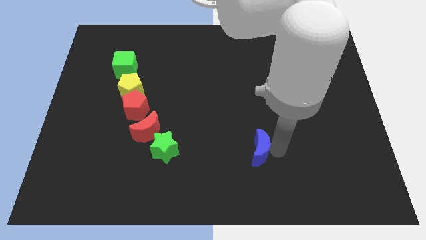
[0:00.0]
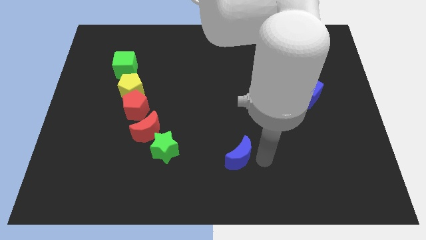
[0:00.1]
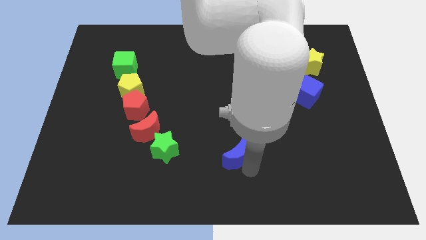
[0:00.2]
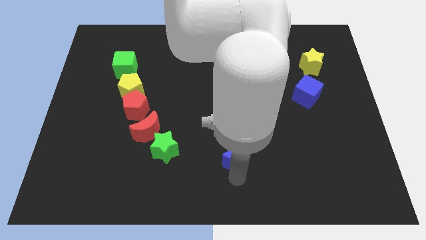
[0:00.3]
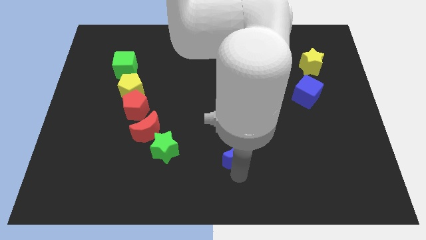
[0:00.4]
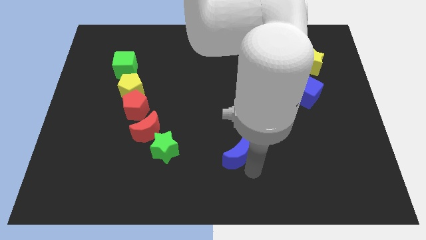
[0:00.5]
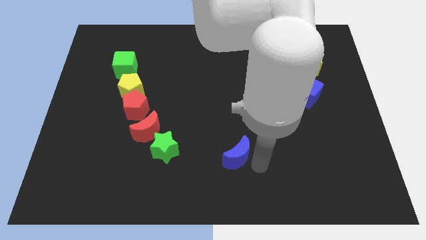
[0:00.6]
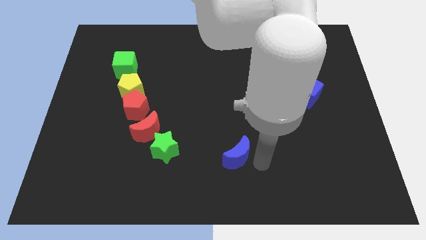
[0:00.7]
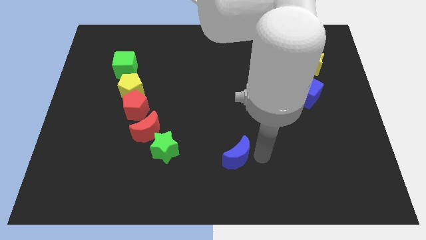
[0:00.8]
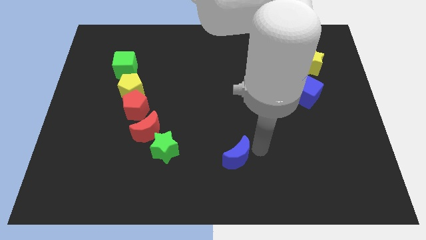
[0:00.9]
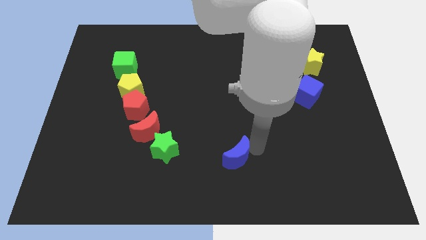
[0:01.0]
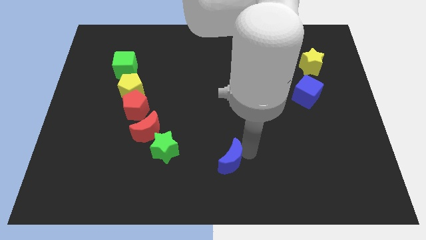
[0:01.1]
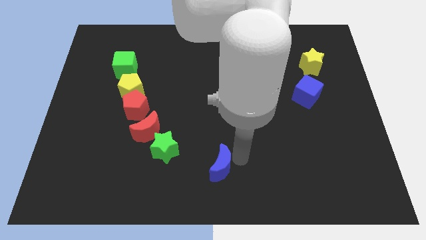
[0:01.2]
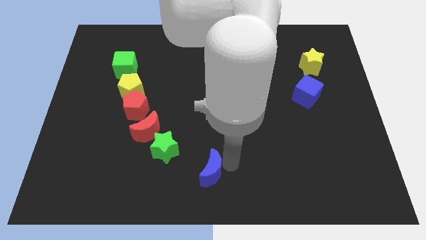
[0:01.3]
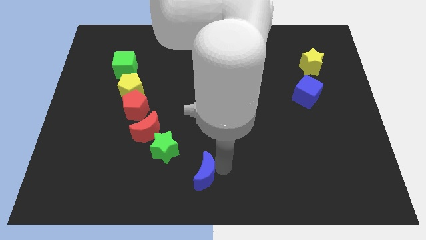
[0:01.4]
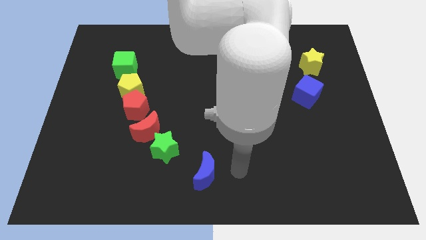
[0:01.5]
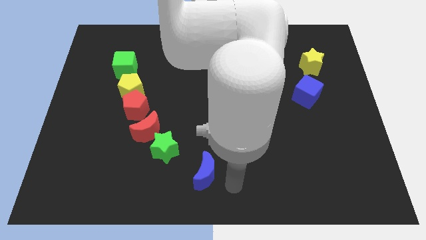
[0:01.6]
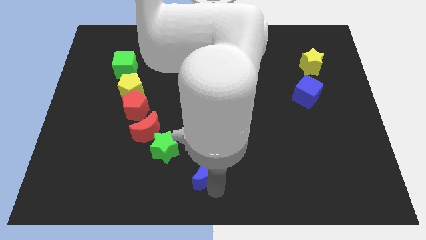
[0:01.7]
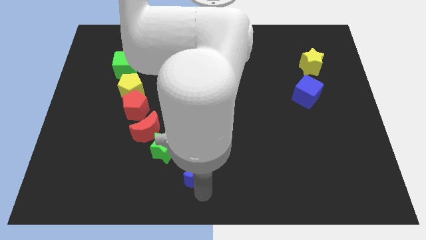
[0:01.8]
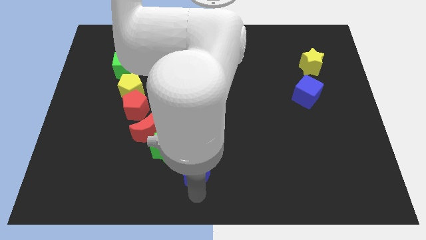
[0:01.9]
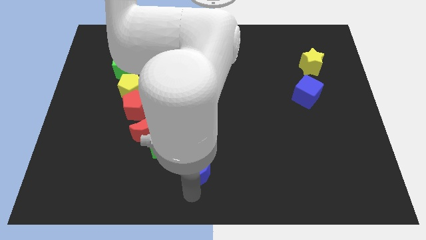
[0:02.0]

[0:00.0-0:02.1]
push blue crescent diagonally towards green star

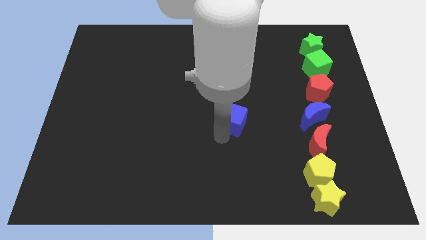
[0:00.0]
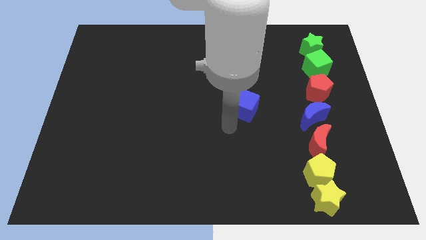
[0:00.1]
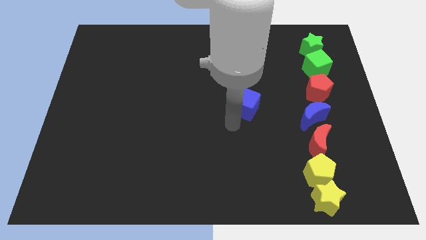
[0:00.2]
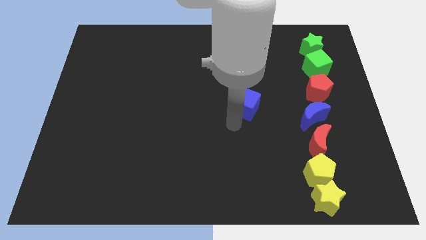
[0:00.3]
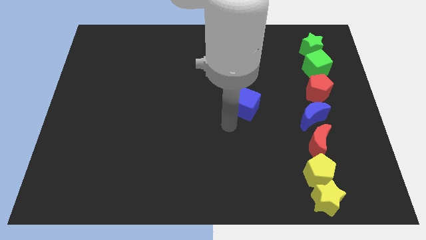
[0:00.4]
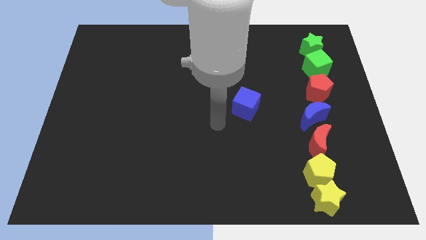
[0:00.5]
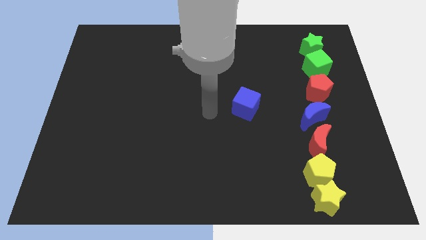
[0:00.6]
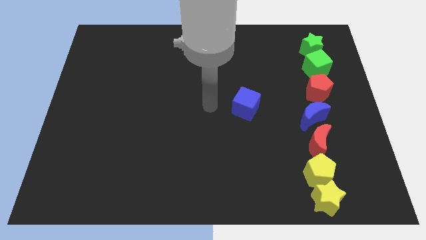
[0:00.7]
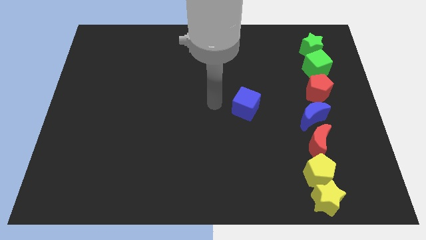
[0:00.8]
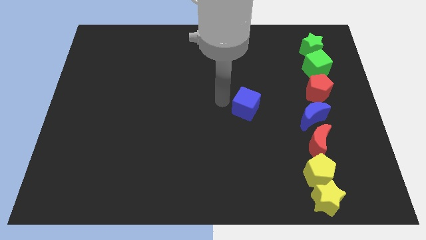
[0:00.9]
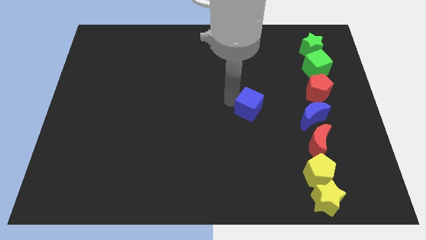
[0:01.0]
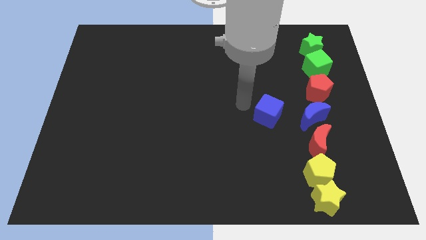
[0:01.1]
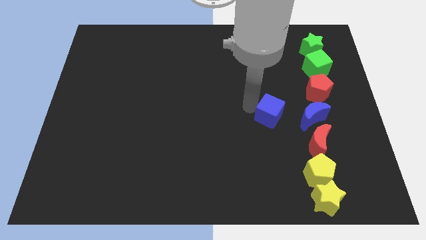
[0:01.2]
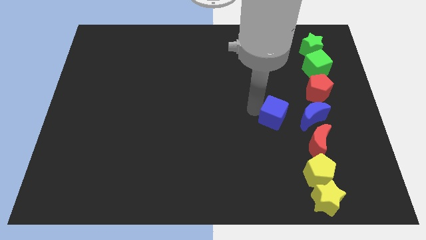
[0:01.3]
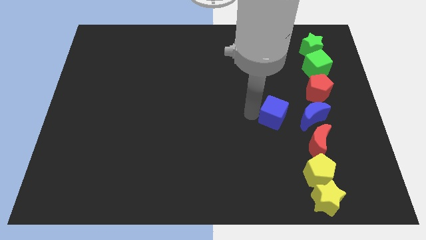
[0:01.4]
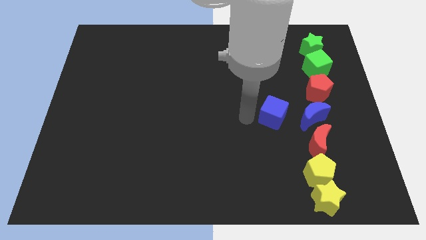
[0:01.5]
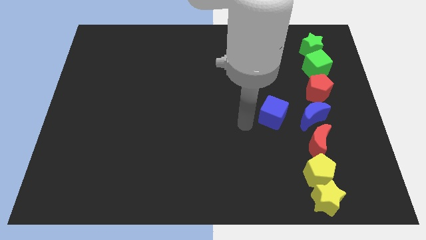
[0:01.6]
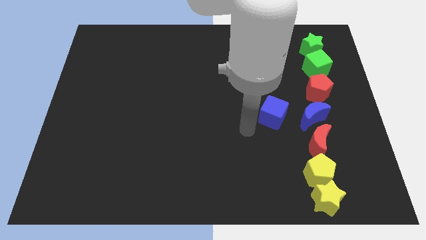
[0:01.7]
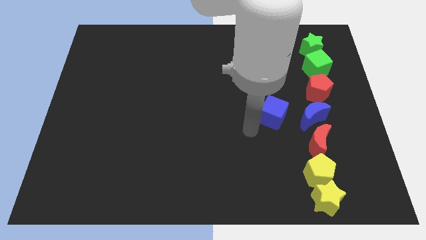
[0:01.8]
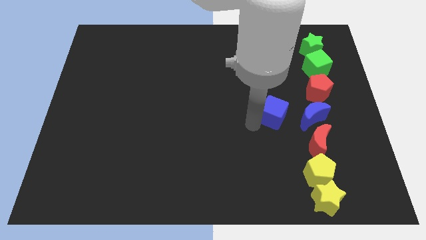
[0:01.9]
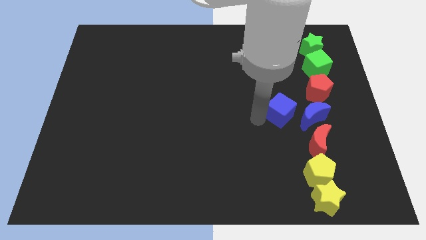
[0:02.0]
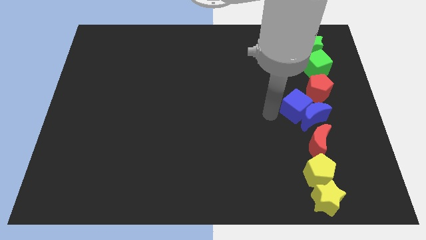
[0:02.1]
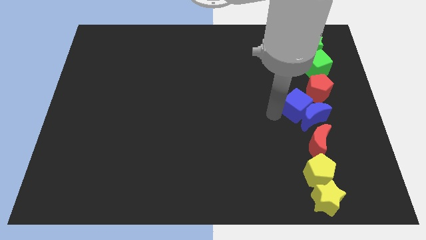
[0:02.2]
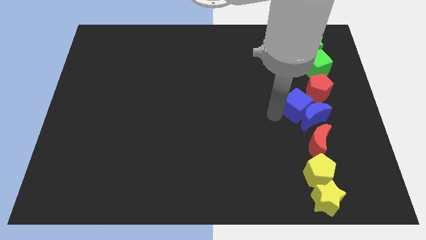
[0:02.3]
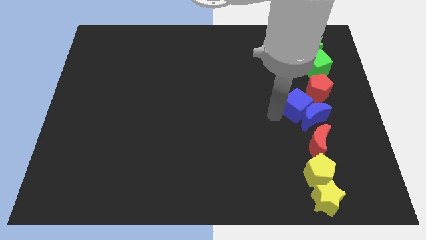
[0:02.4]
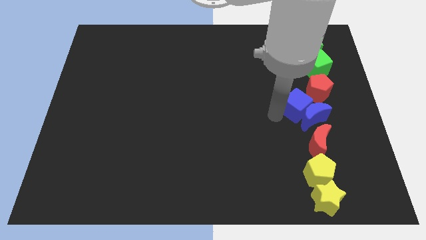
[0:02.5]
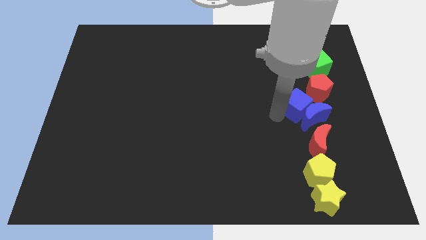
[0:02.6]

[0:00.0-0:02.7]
push blue cube into the blue crescent

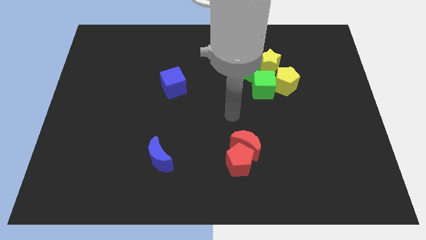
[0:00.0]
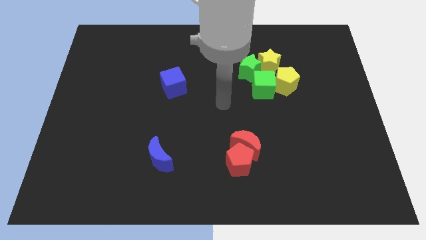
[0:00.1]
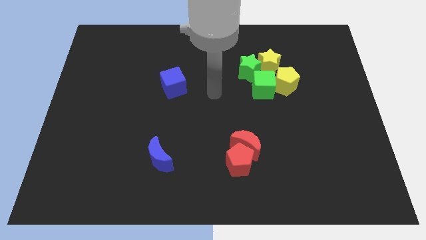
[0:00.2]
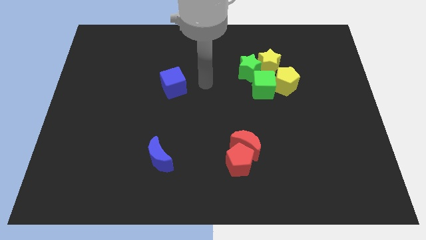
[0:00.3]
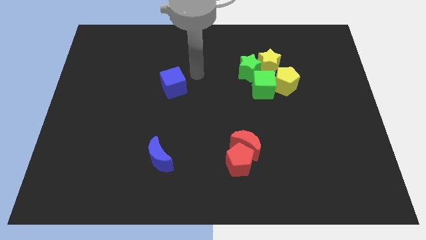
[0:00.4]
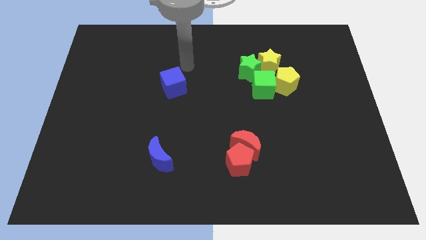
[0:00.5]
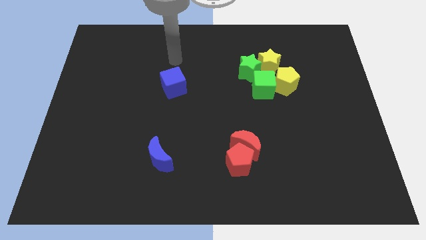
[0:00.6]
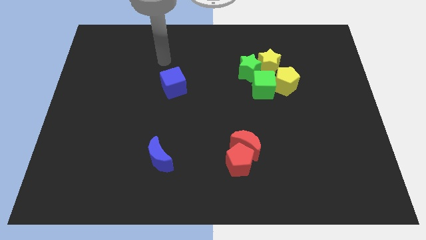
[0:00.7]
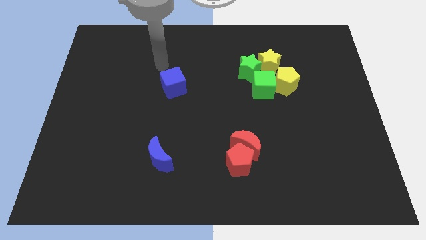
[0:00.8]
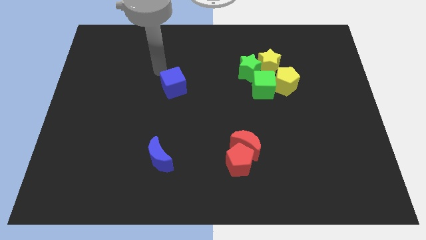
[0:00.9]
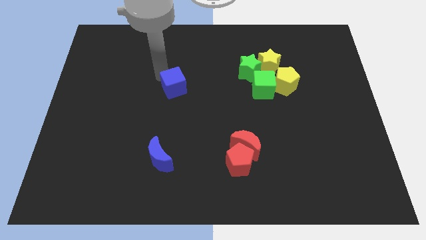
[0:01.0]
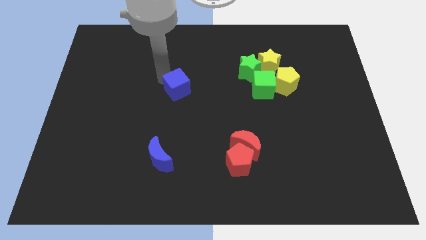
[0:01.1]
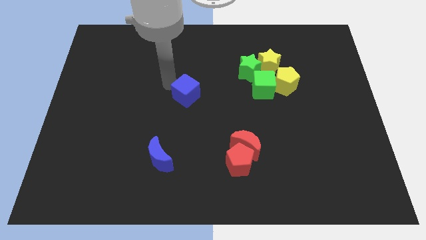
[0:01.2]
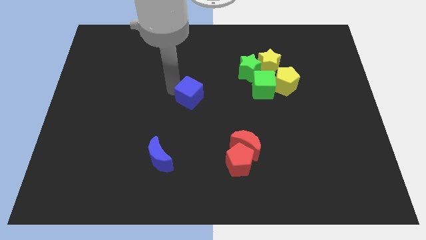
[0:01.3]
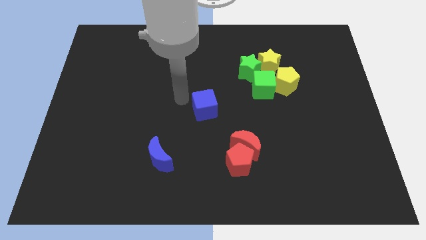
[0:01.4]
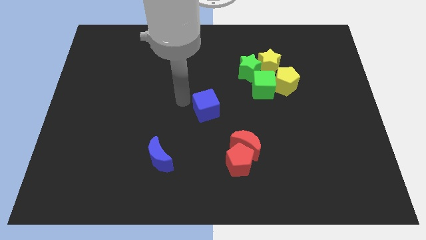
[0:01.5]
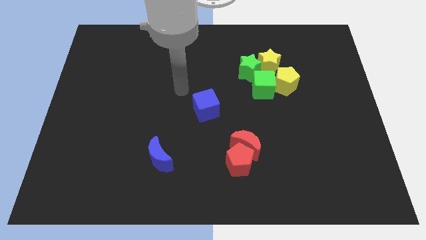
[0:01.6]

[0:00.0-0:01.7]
move the blue cube to the center of the board

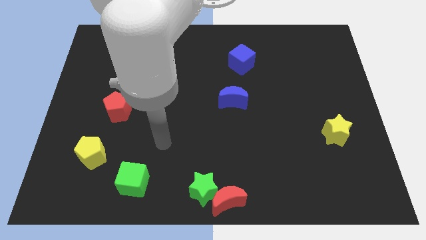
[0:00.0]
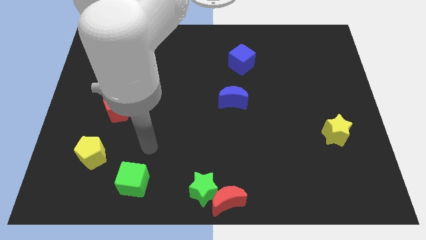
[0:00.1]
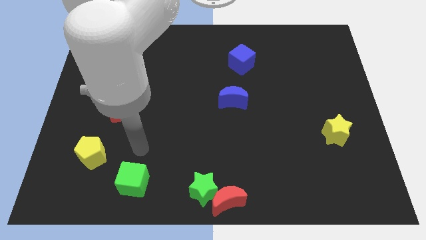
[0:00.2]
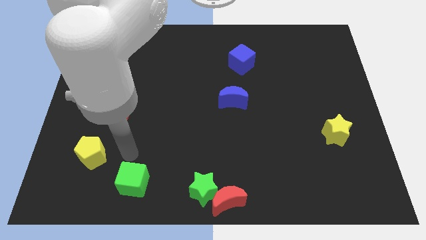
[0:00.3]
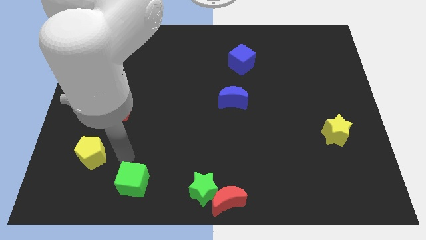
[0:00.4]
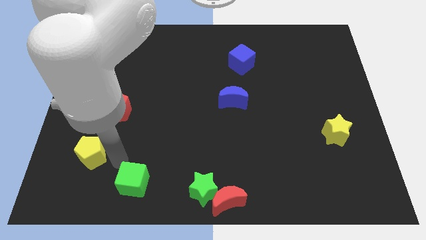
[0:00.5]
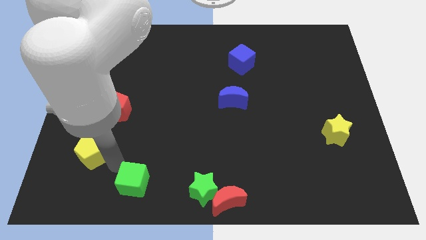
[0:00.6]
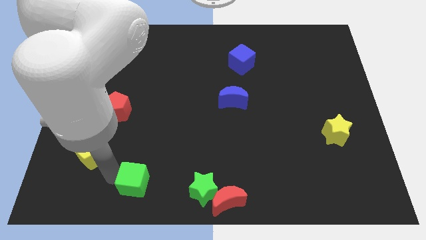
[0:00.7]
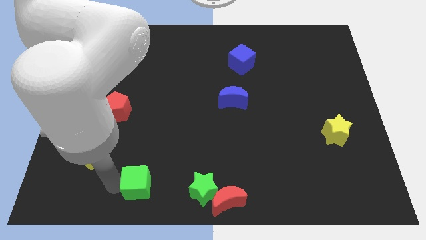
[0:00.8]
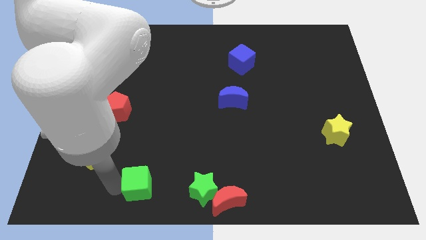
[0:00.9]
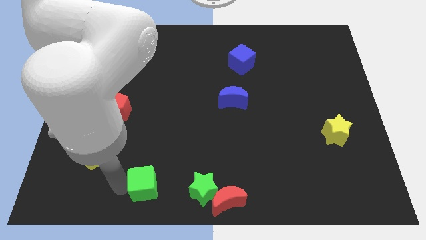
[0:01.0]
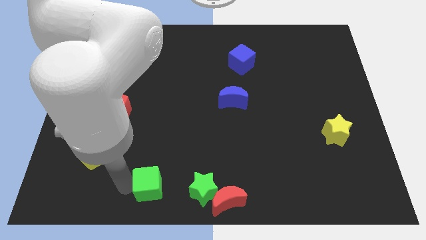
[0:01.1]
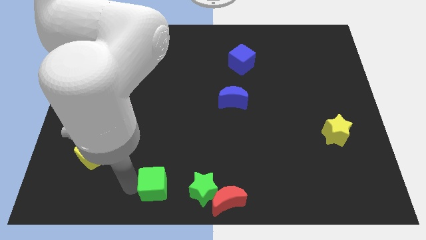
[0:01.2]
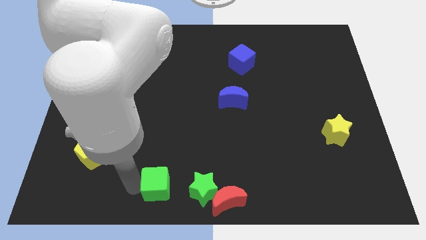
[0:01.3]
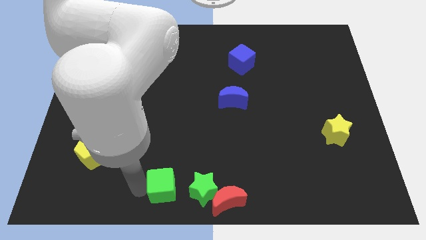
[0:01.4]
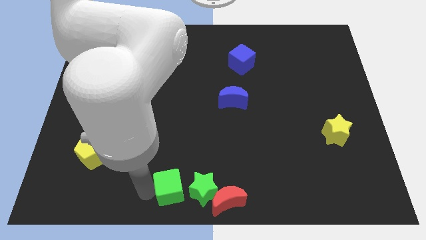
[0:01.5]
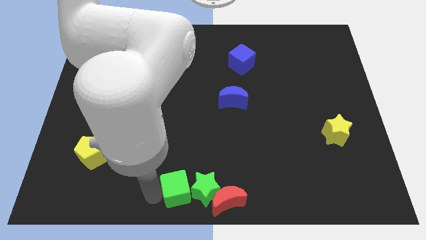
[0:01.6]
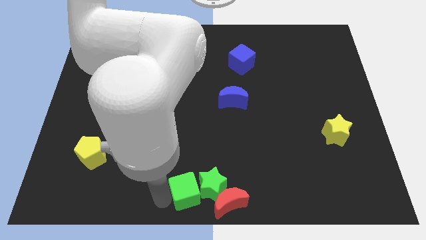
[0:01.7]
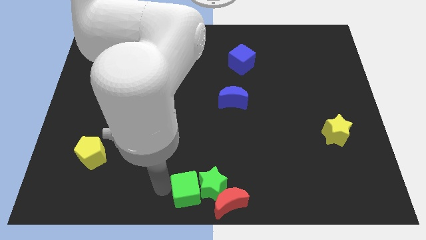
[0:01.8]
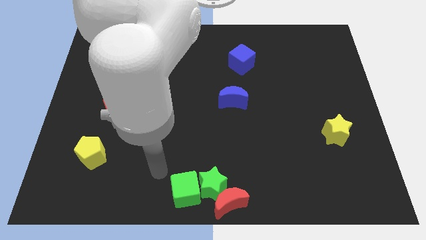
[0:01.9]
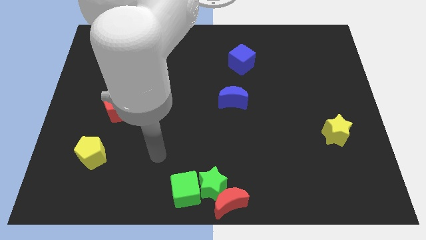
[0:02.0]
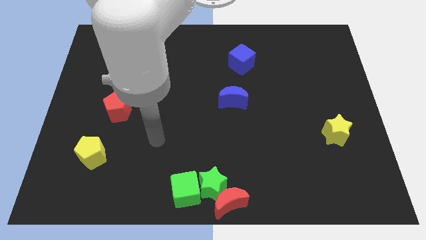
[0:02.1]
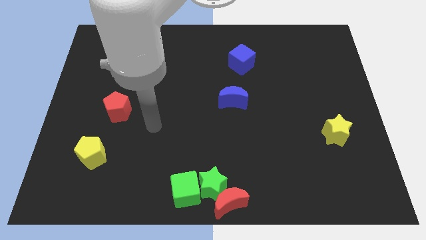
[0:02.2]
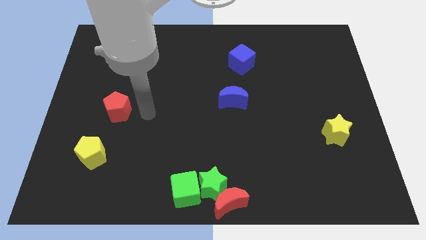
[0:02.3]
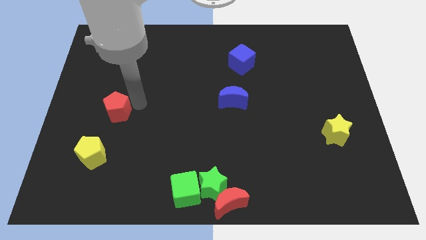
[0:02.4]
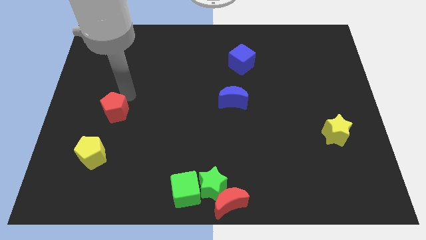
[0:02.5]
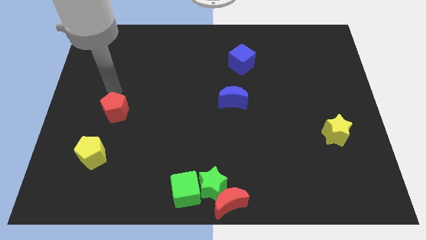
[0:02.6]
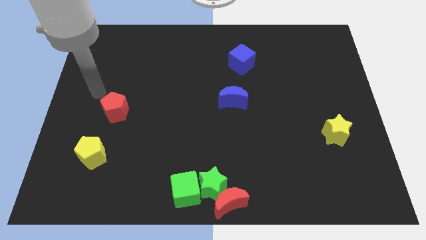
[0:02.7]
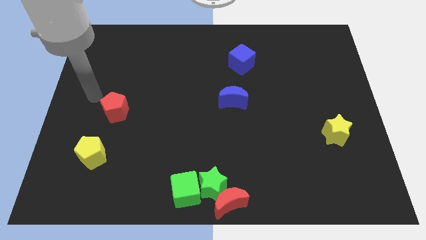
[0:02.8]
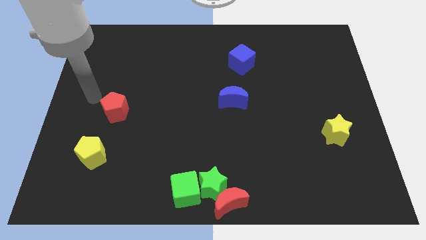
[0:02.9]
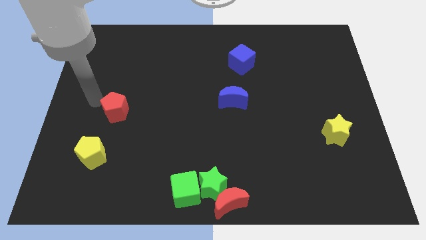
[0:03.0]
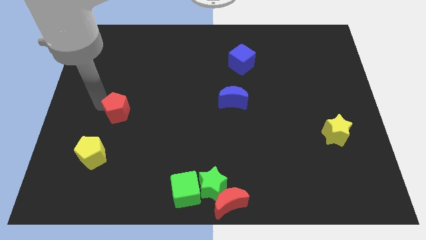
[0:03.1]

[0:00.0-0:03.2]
move the green cube into the green star
